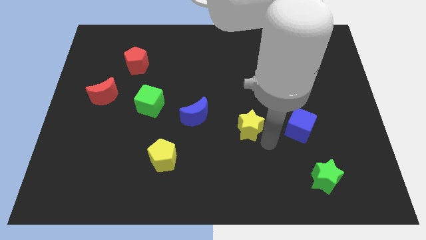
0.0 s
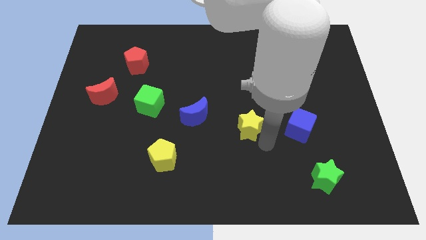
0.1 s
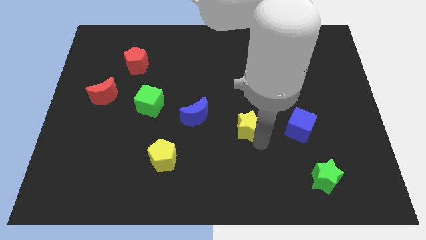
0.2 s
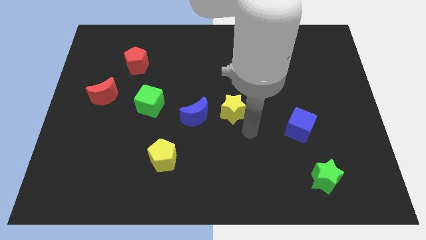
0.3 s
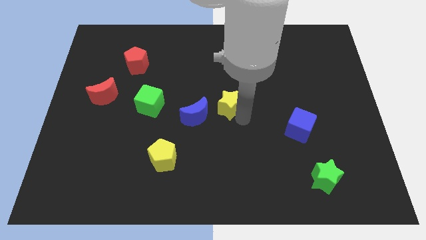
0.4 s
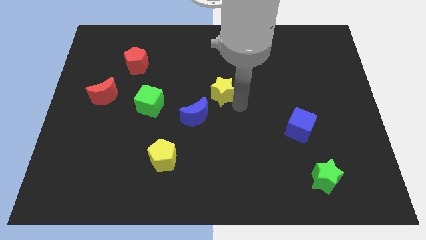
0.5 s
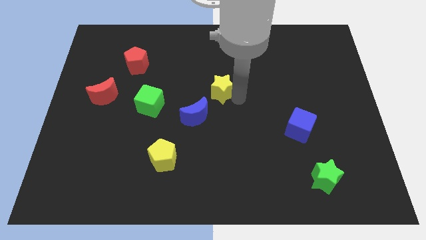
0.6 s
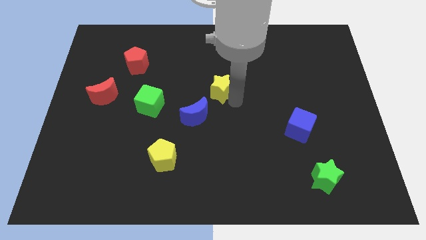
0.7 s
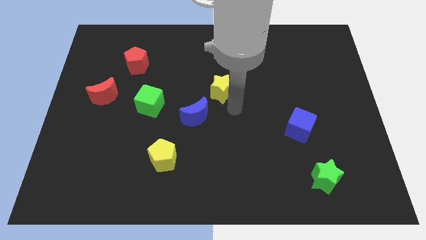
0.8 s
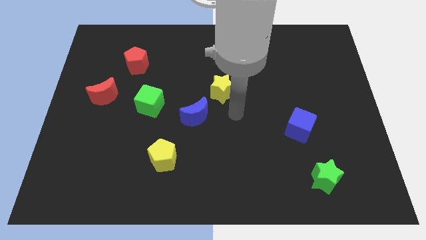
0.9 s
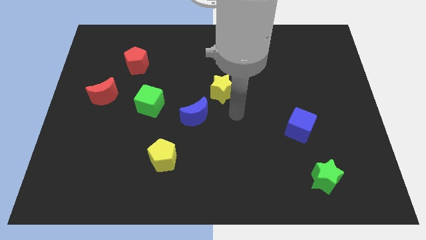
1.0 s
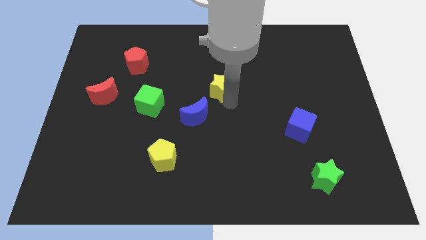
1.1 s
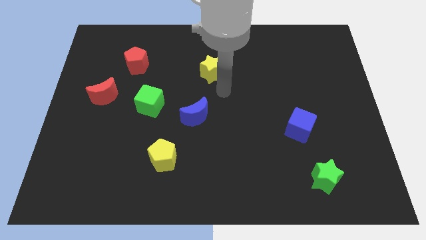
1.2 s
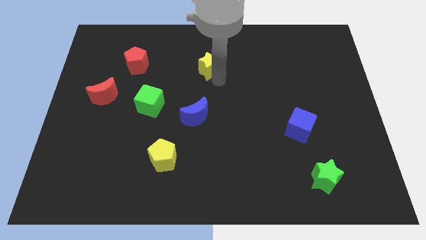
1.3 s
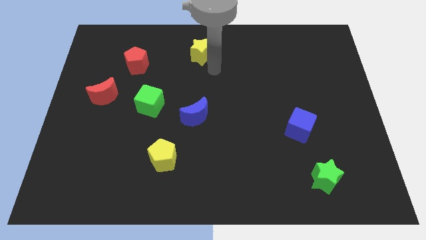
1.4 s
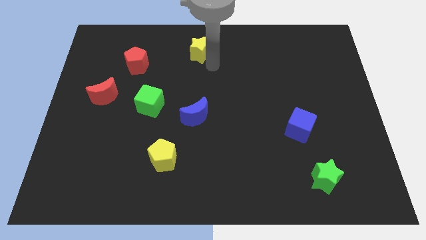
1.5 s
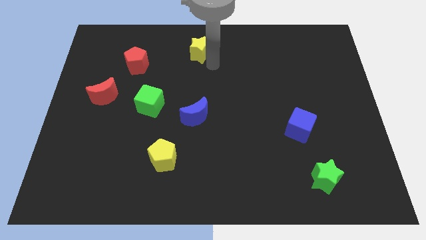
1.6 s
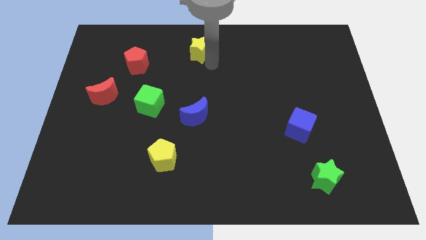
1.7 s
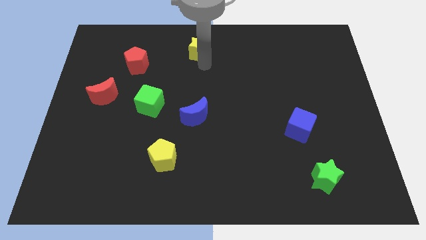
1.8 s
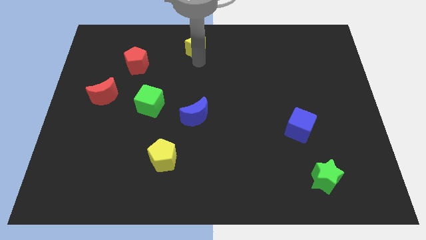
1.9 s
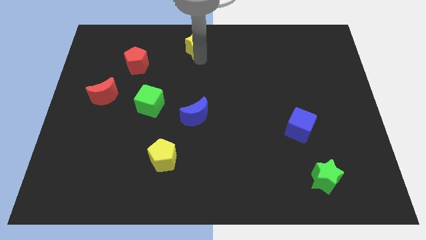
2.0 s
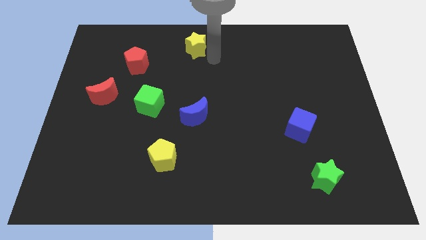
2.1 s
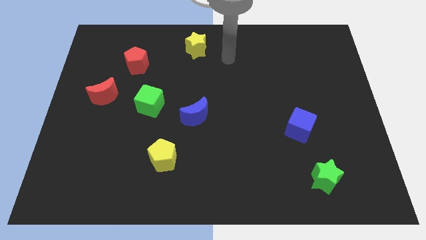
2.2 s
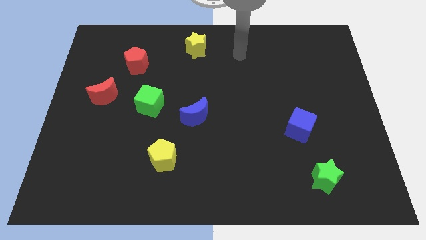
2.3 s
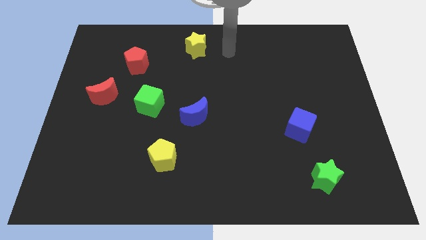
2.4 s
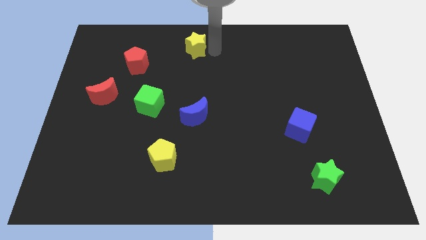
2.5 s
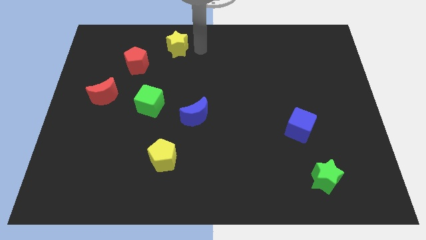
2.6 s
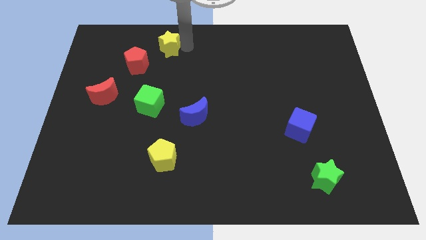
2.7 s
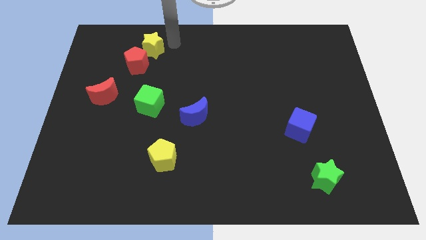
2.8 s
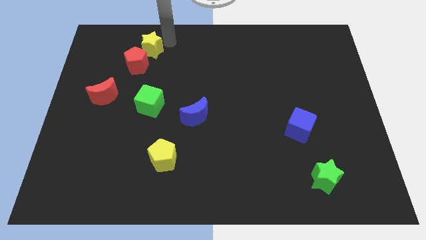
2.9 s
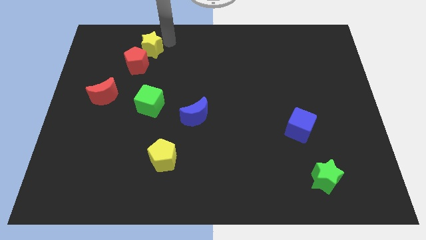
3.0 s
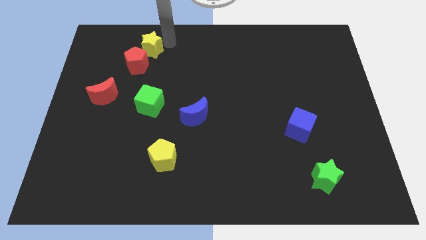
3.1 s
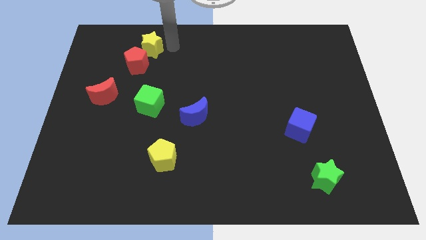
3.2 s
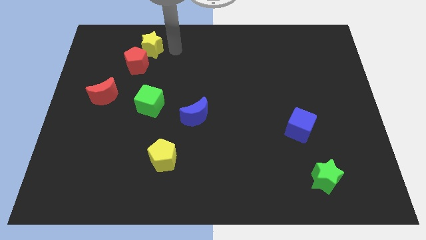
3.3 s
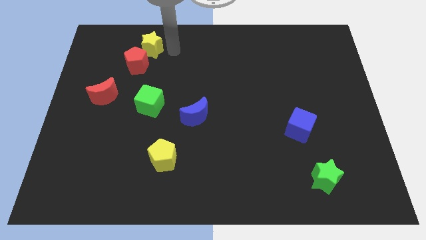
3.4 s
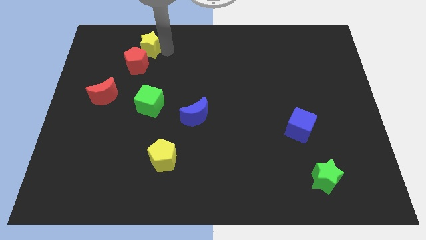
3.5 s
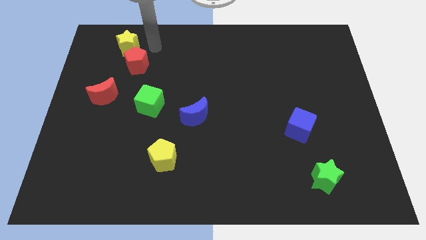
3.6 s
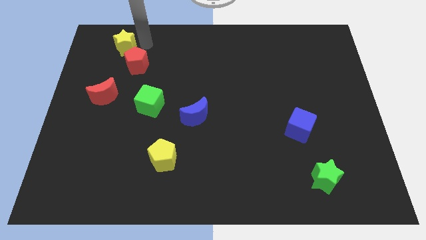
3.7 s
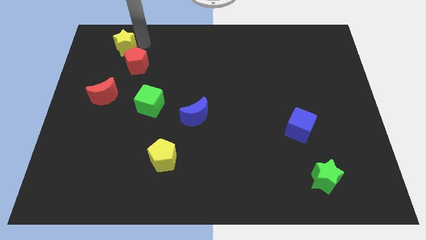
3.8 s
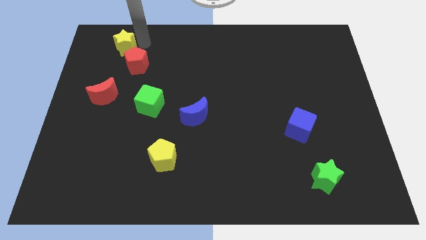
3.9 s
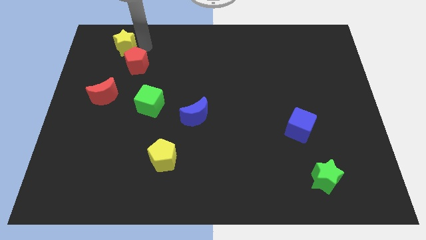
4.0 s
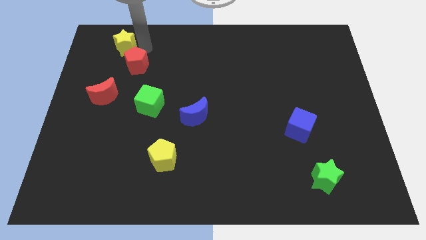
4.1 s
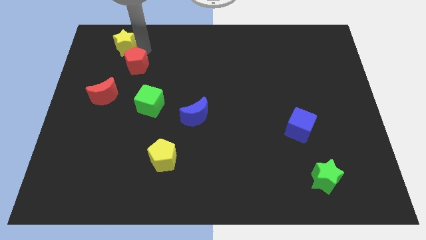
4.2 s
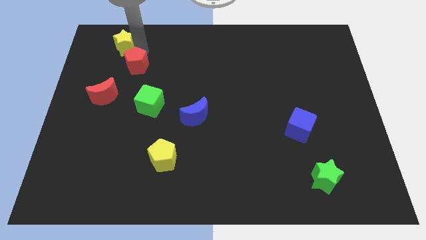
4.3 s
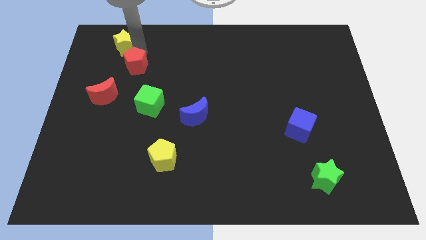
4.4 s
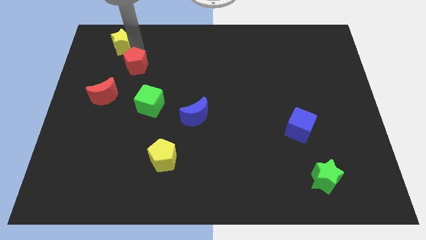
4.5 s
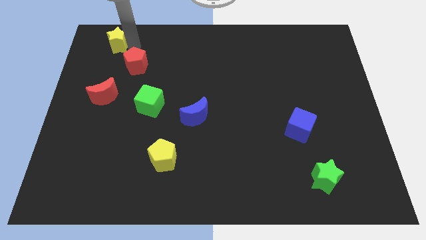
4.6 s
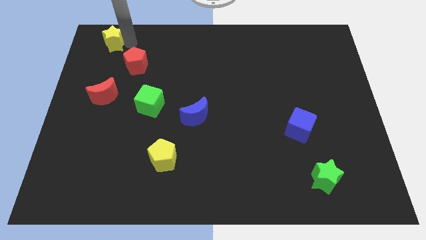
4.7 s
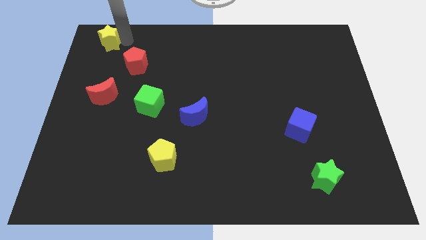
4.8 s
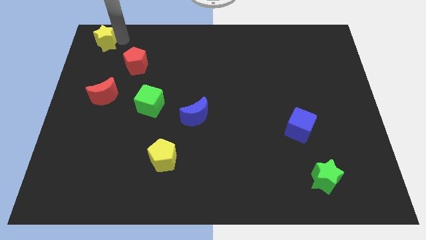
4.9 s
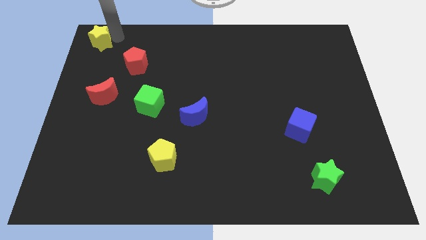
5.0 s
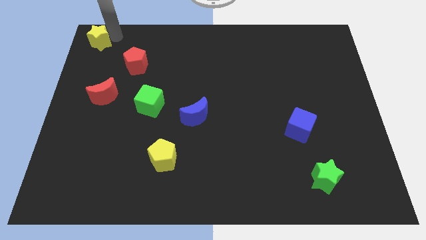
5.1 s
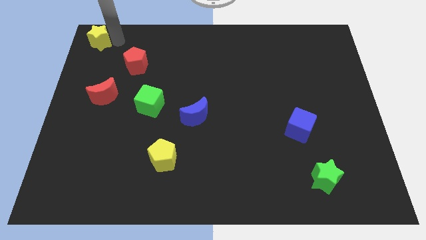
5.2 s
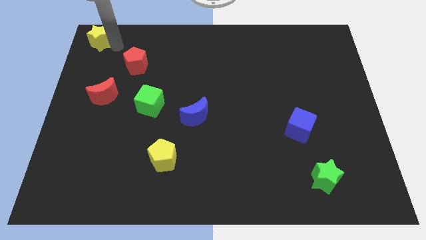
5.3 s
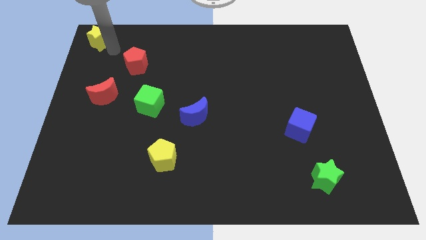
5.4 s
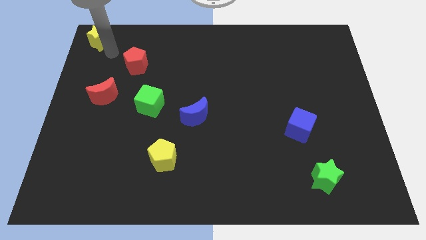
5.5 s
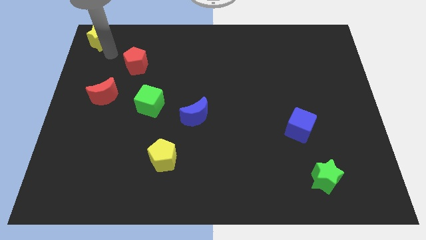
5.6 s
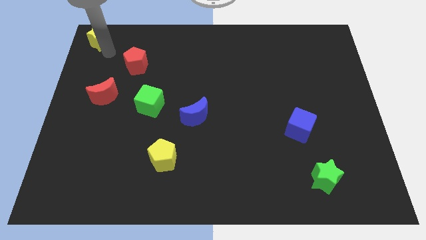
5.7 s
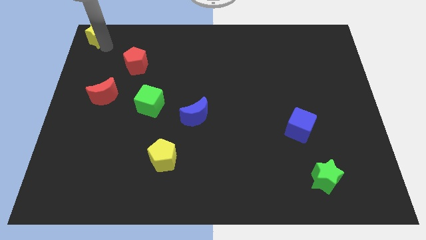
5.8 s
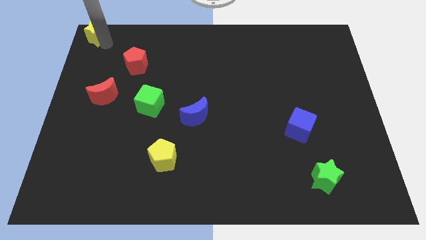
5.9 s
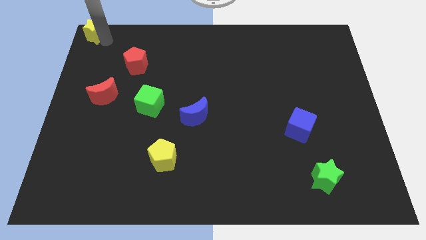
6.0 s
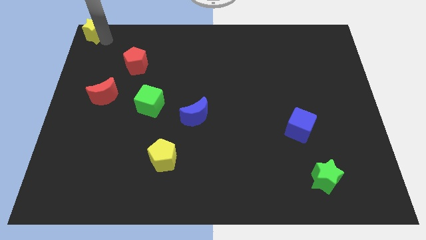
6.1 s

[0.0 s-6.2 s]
move the yellow star to the left top corner

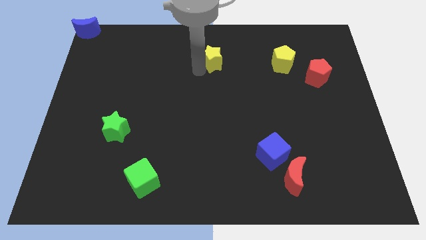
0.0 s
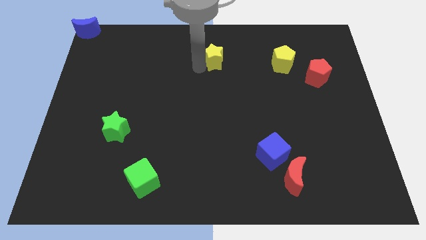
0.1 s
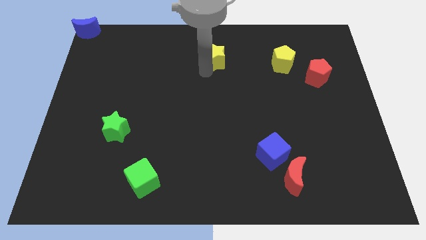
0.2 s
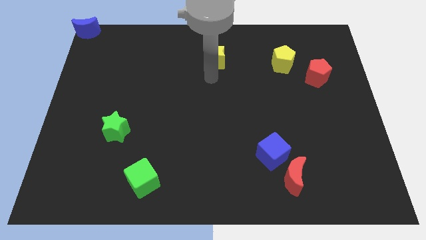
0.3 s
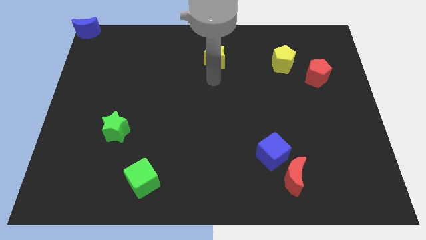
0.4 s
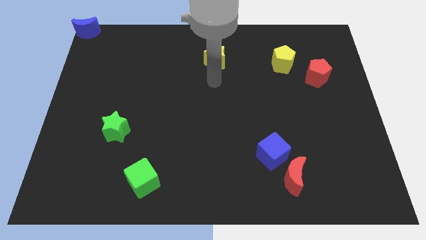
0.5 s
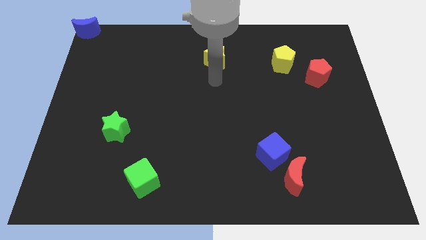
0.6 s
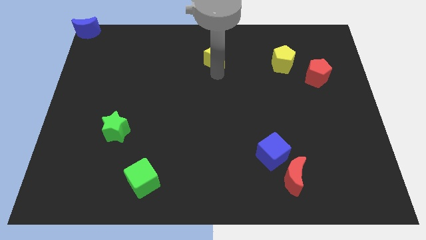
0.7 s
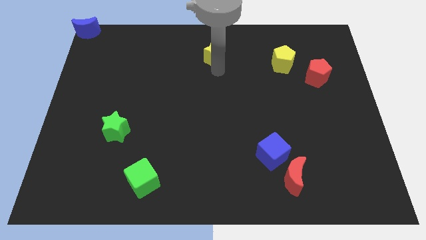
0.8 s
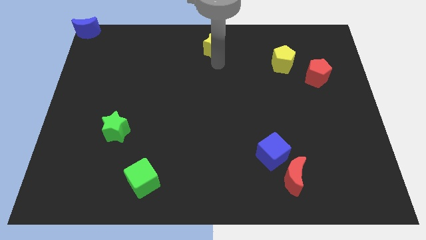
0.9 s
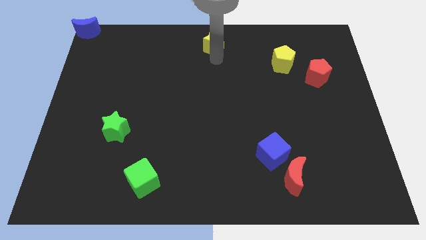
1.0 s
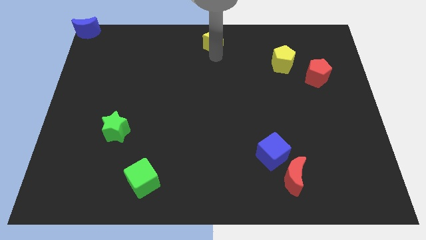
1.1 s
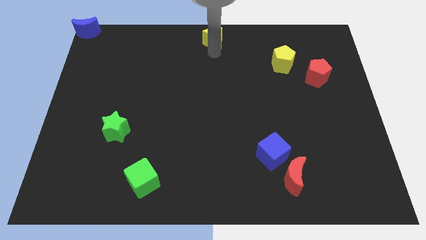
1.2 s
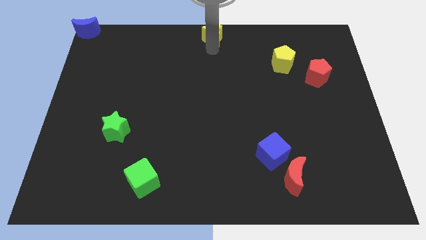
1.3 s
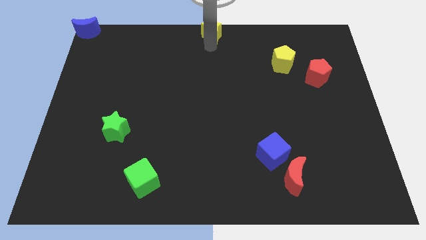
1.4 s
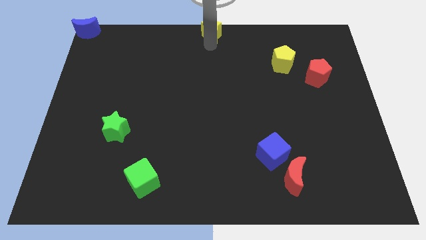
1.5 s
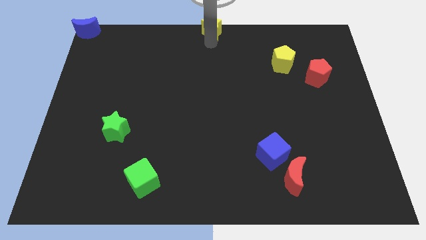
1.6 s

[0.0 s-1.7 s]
place the yellow star to the top center

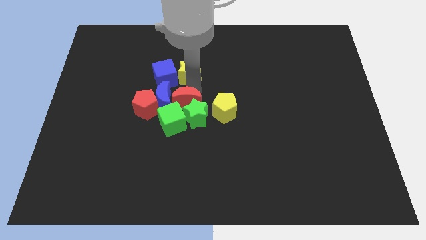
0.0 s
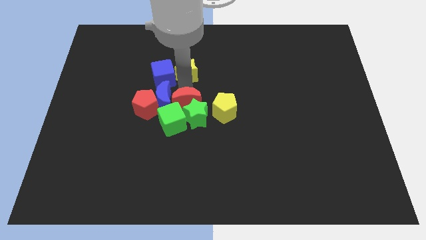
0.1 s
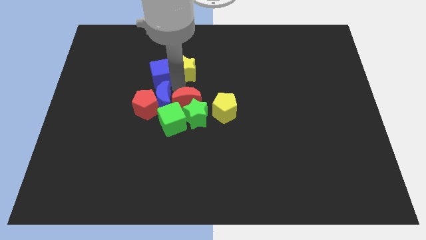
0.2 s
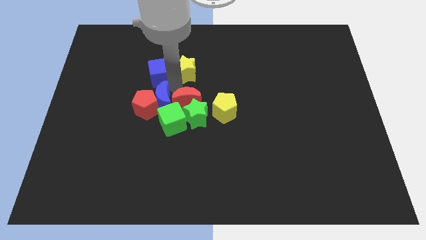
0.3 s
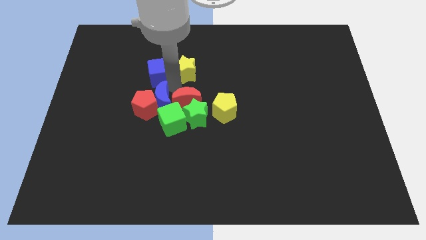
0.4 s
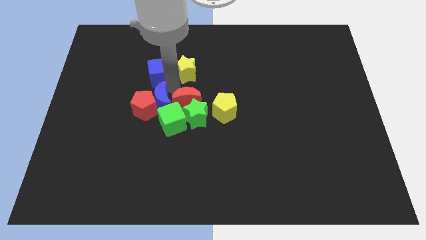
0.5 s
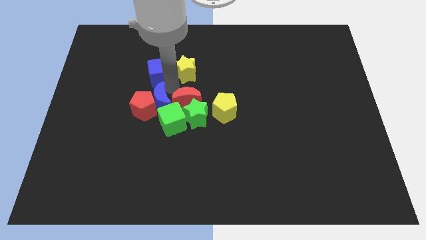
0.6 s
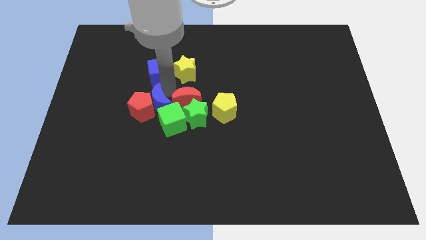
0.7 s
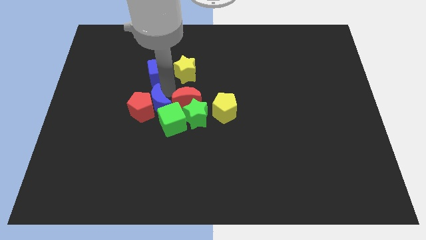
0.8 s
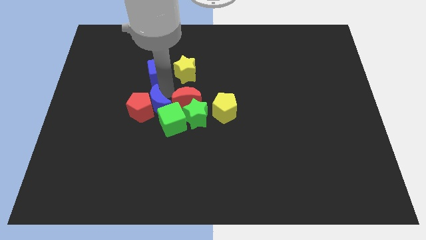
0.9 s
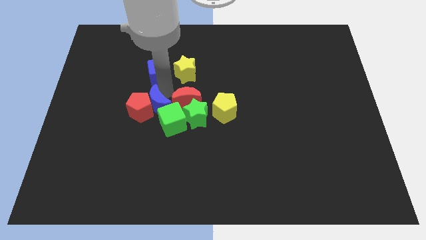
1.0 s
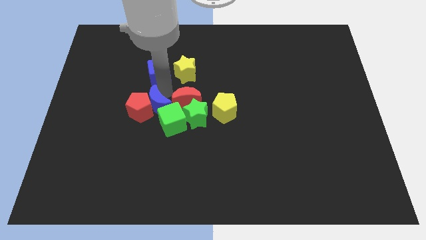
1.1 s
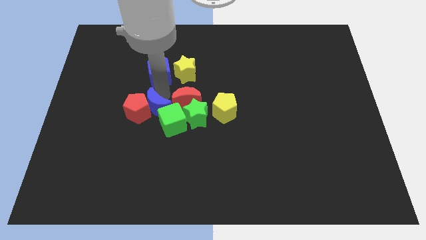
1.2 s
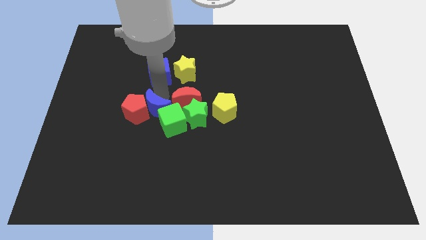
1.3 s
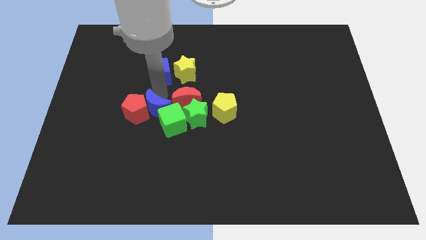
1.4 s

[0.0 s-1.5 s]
push the blue moon into the red pentagon
